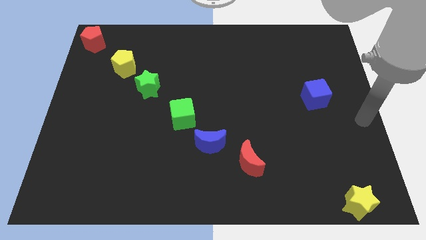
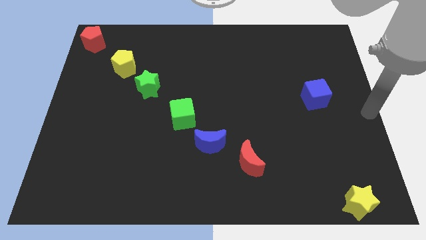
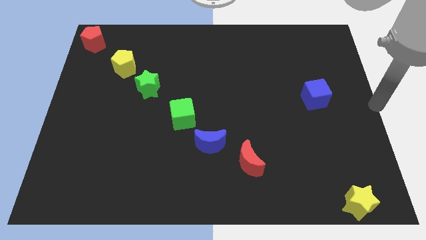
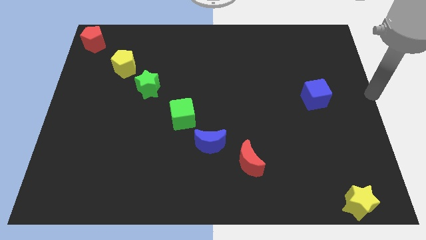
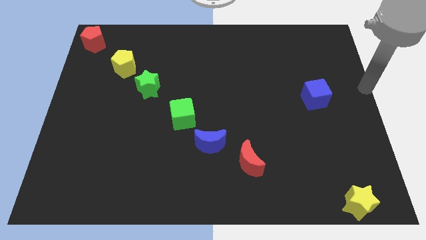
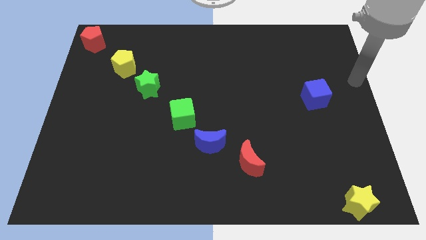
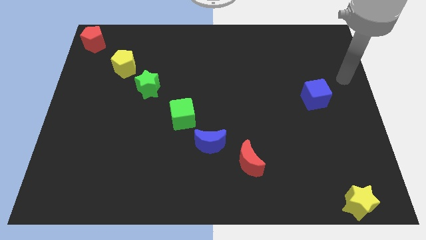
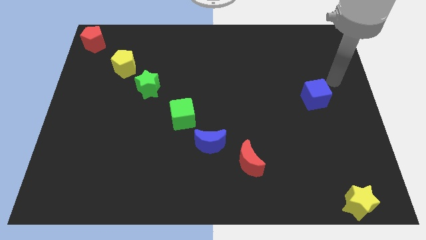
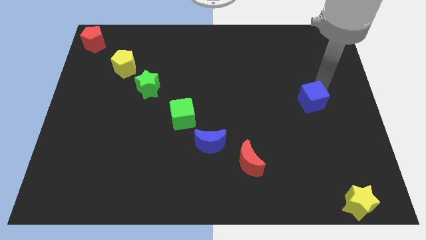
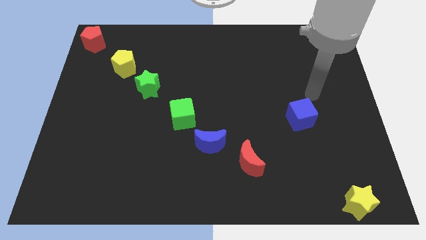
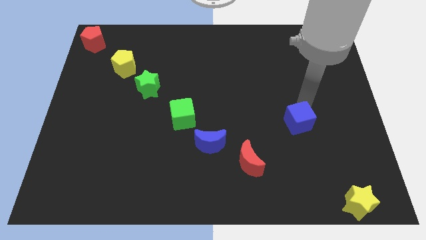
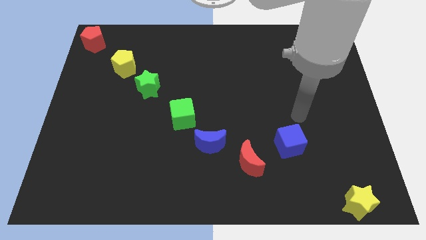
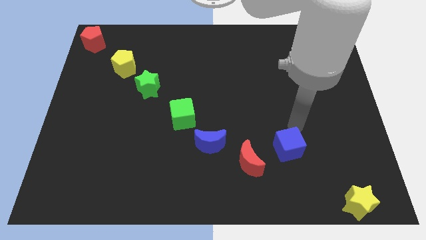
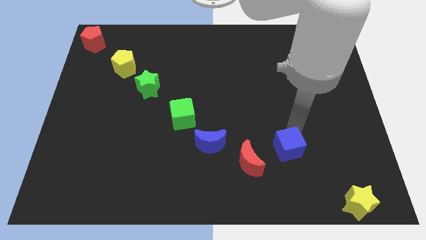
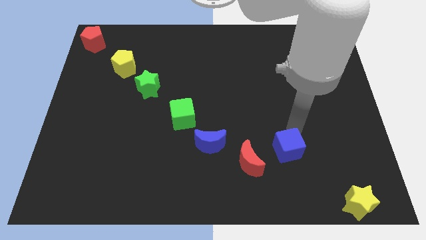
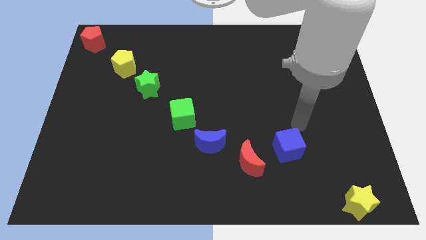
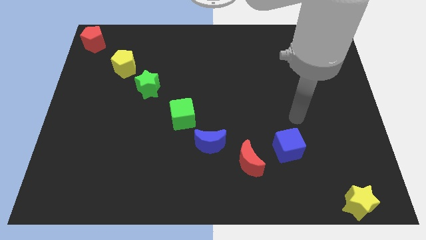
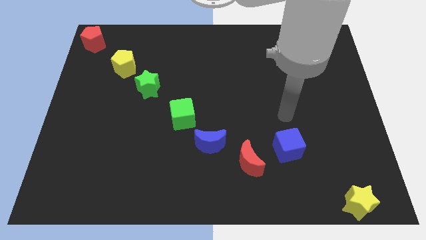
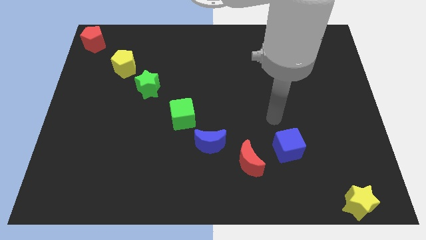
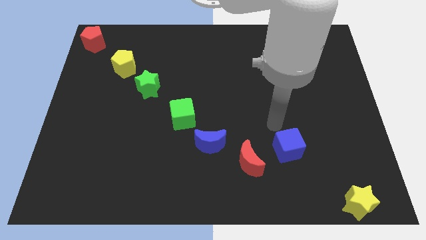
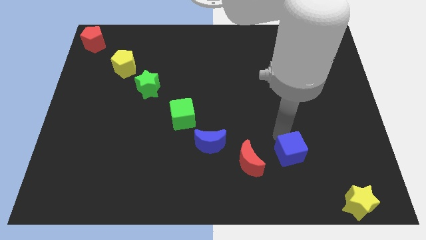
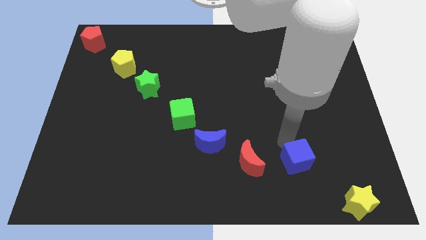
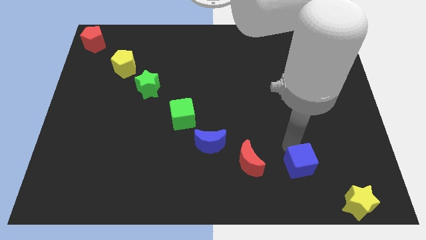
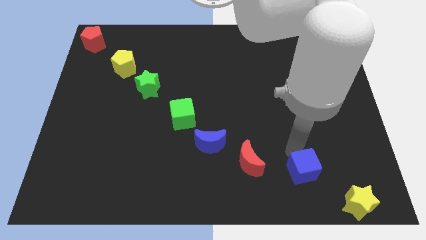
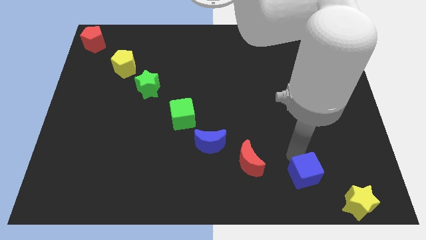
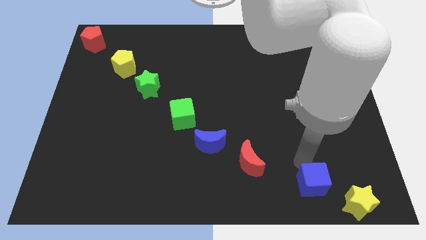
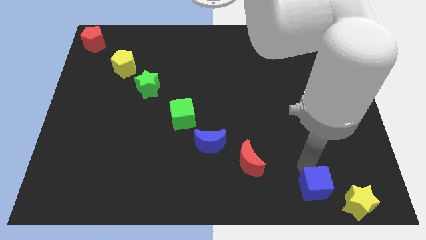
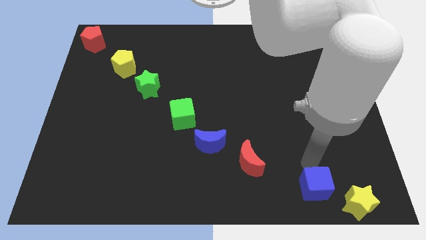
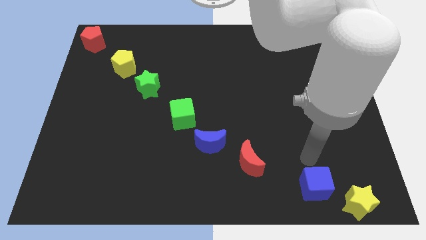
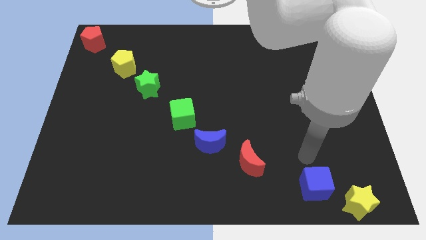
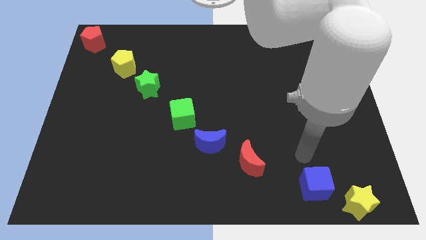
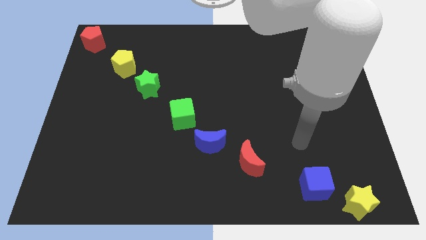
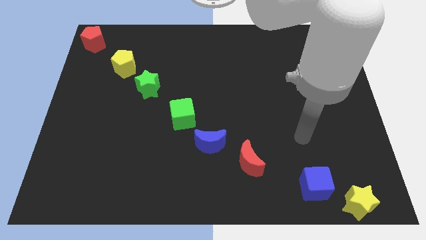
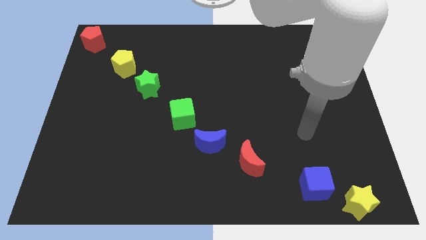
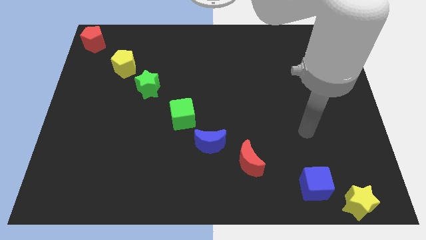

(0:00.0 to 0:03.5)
move the blue cube to the bottom right of the red crescent

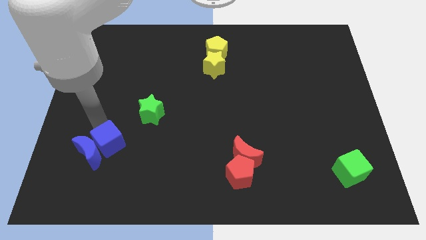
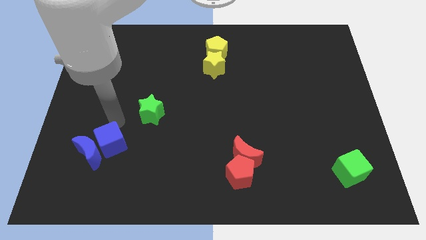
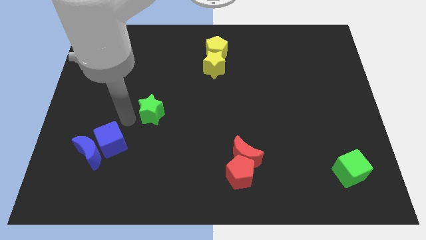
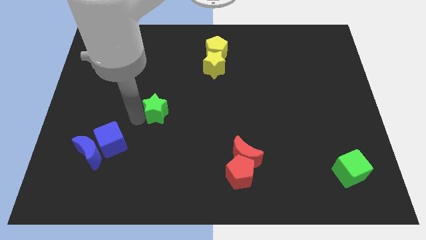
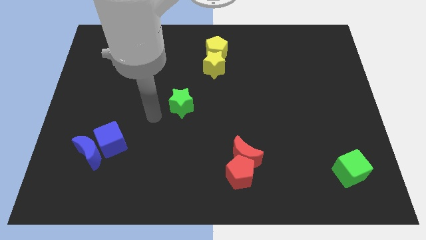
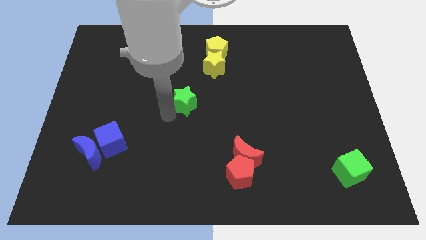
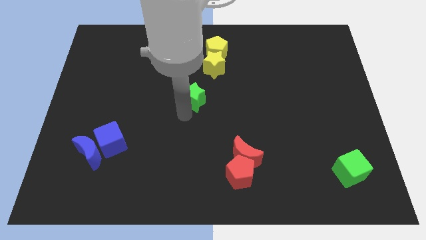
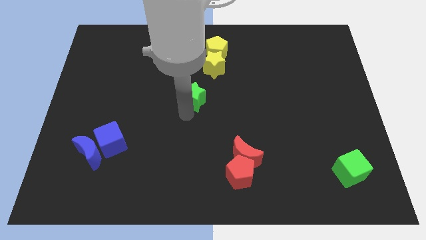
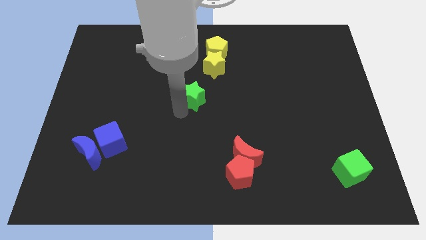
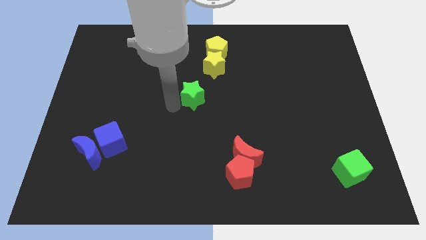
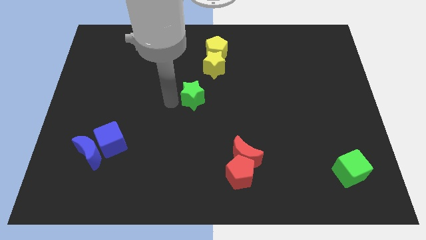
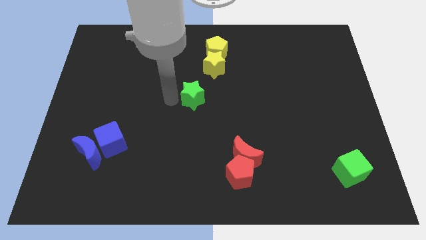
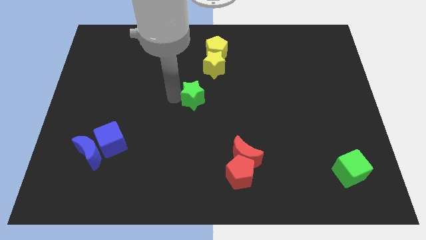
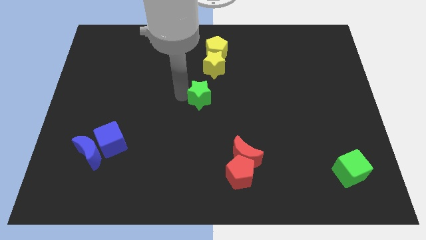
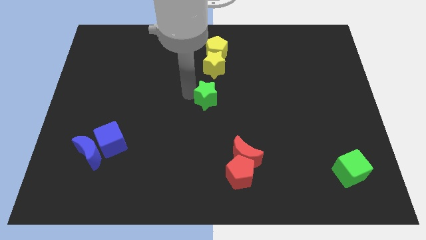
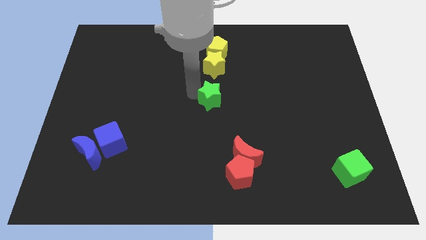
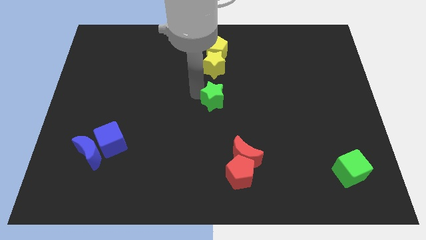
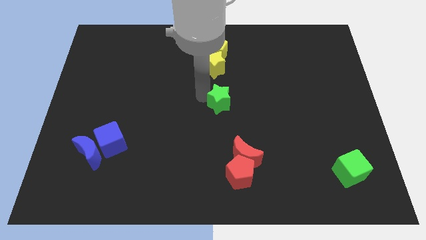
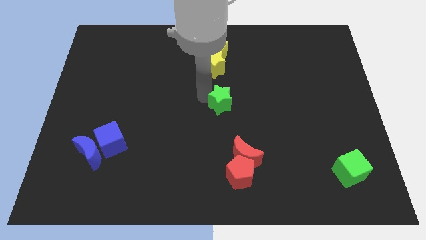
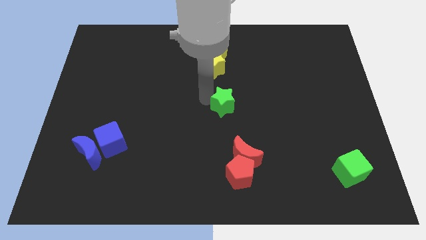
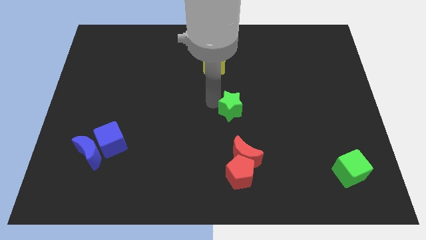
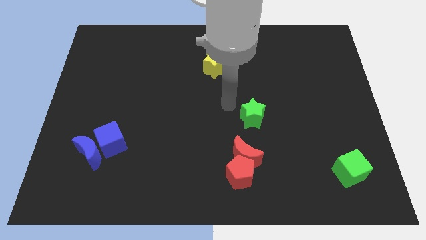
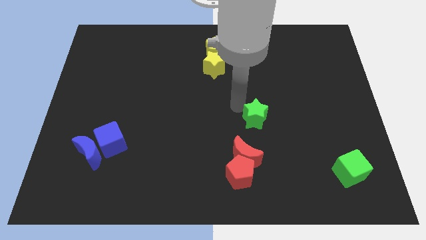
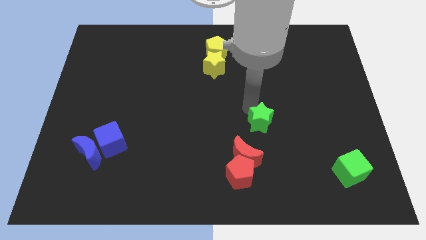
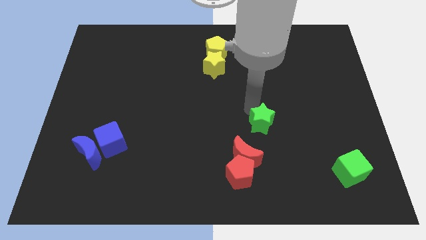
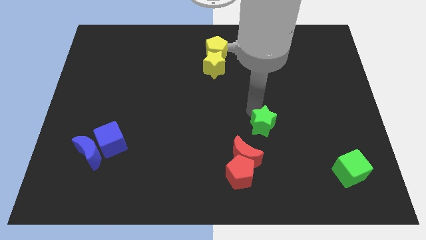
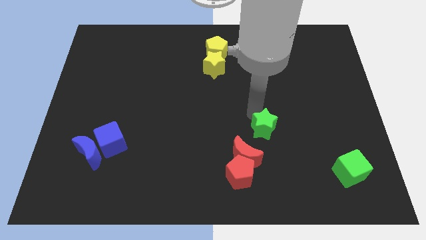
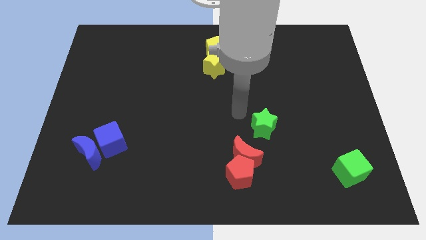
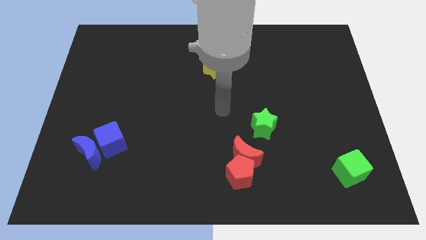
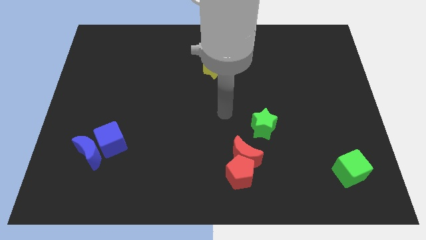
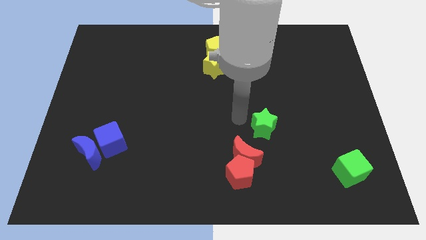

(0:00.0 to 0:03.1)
push the green star towards the top right side of the red moon

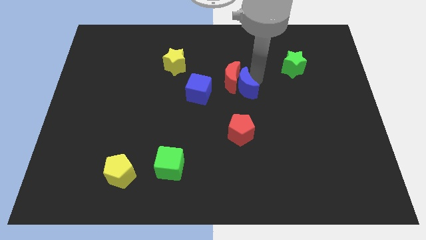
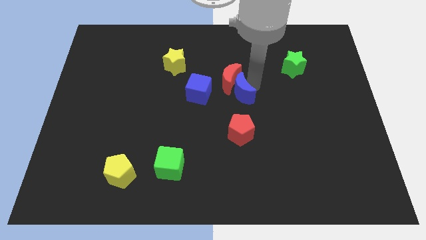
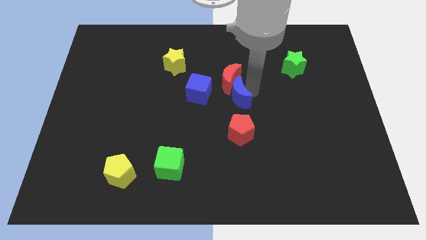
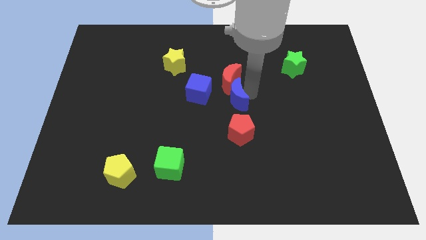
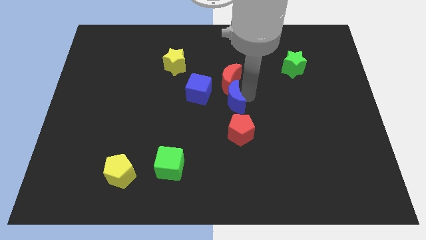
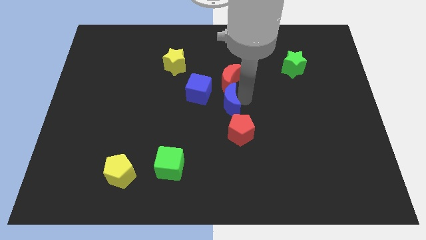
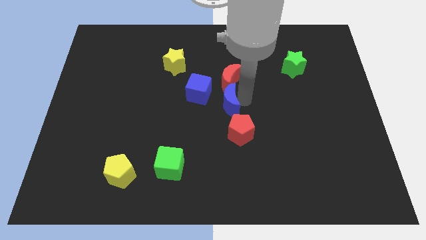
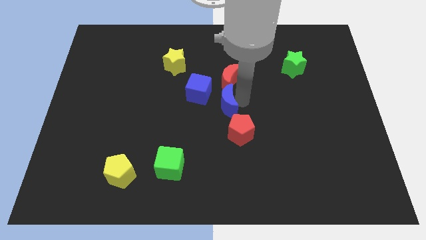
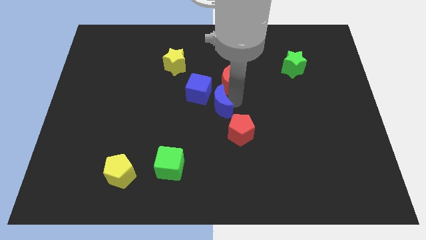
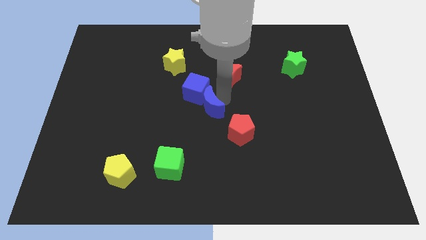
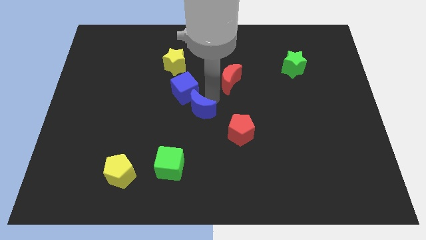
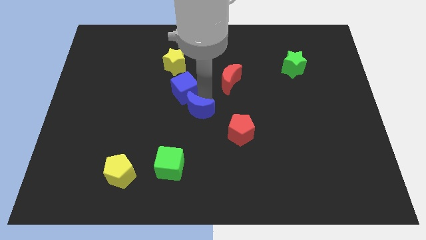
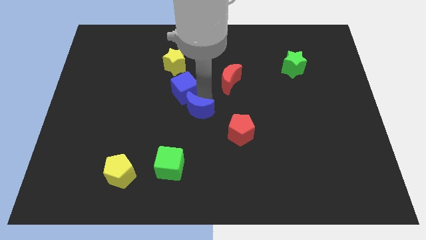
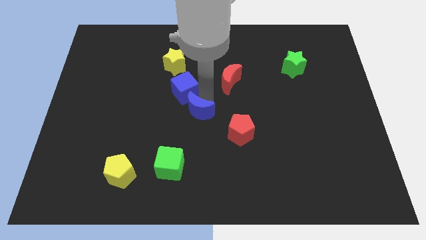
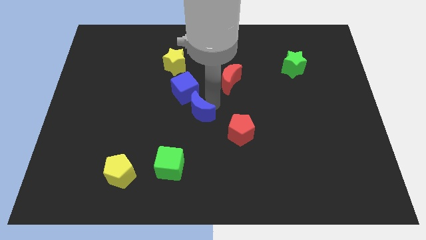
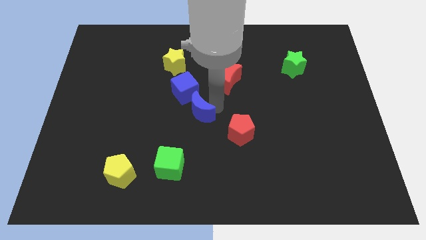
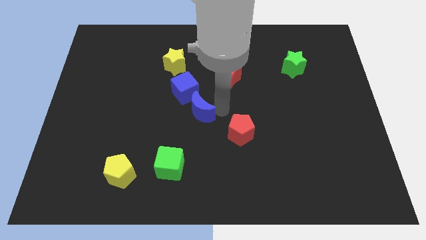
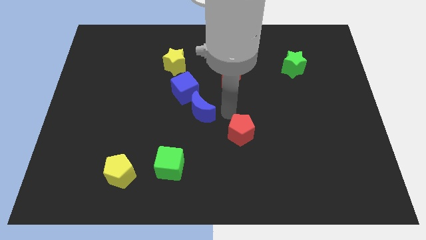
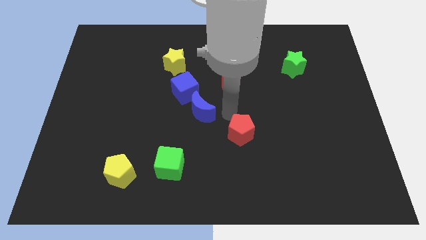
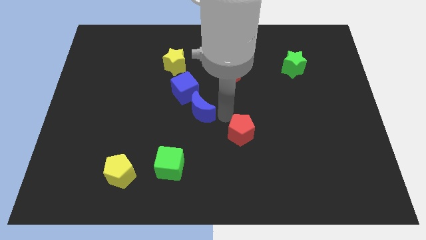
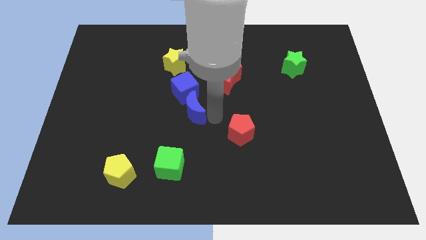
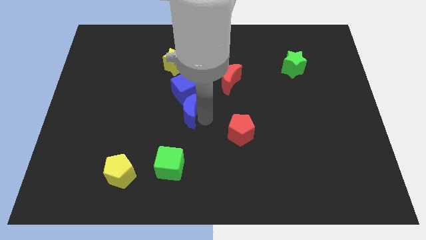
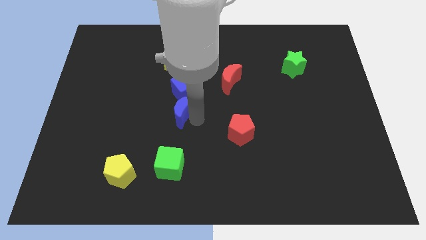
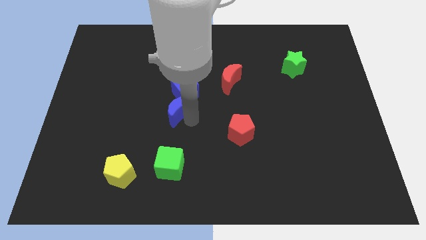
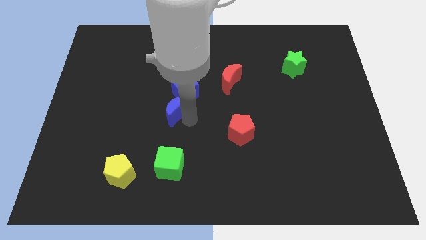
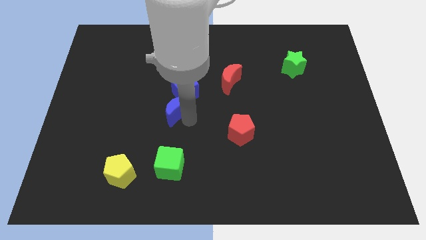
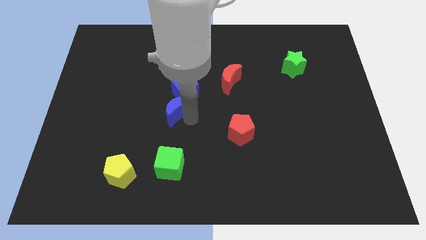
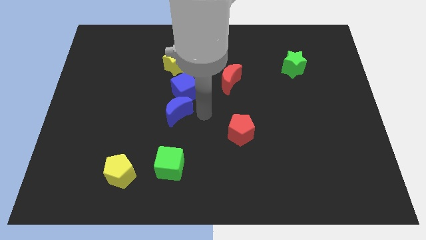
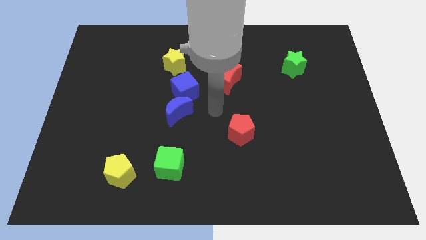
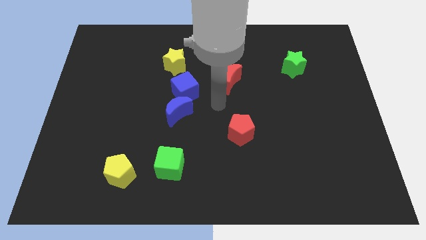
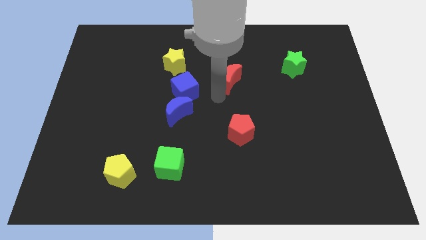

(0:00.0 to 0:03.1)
place the blue moon below the blue cube
